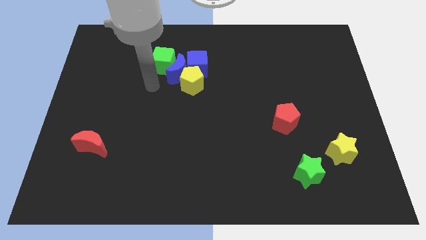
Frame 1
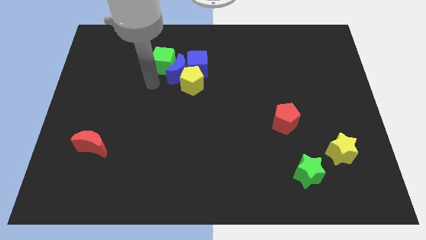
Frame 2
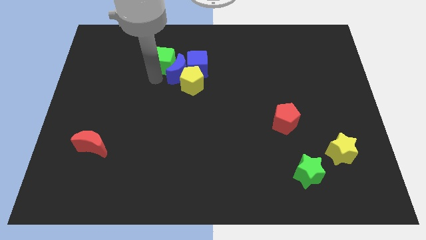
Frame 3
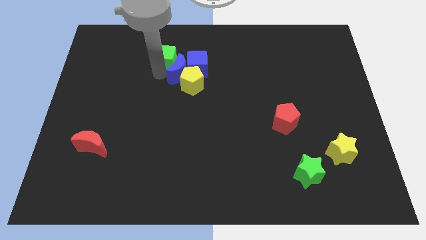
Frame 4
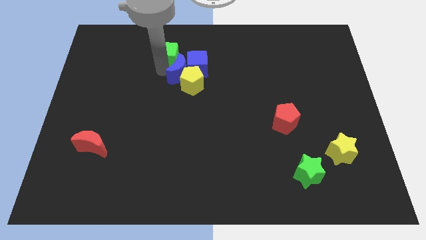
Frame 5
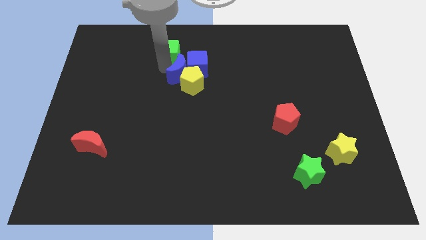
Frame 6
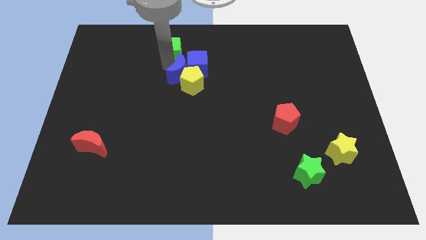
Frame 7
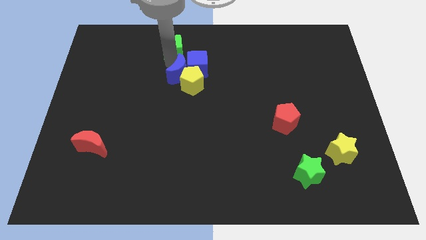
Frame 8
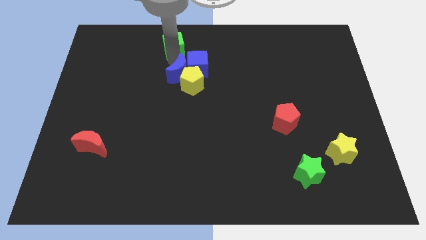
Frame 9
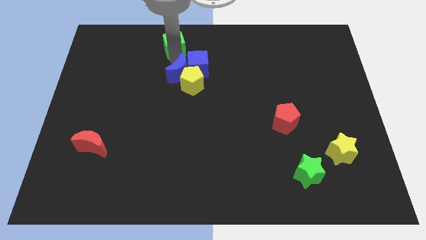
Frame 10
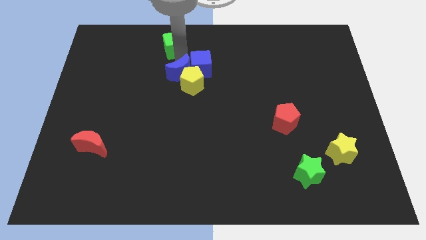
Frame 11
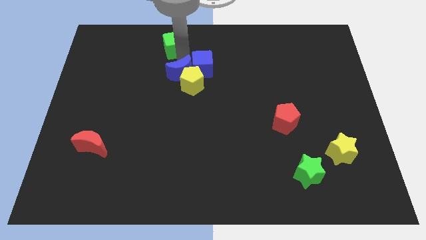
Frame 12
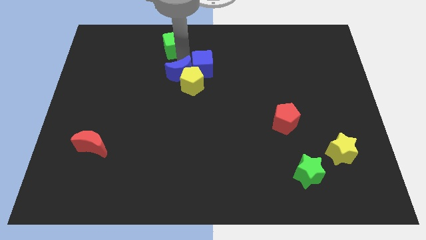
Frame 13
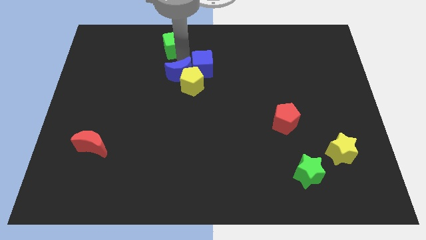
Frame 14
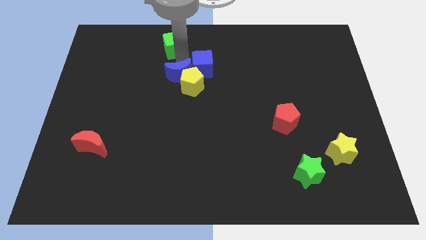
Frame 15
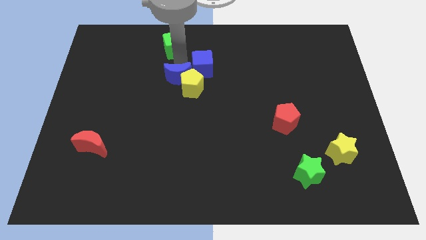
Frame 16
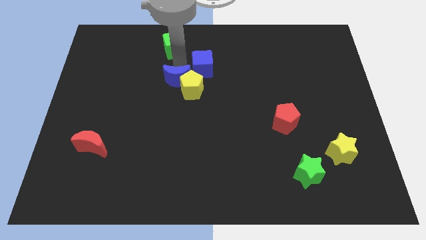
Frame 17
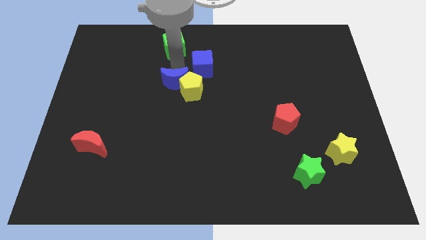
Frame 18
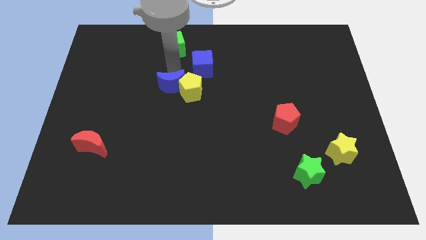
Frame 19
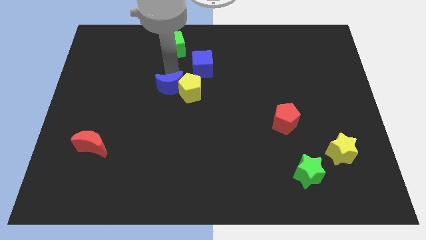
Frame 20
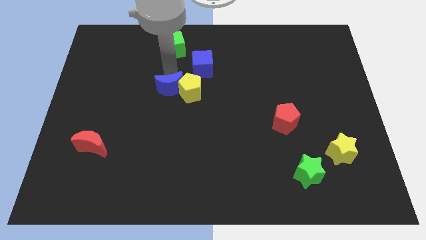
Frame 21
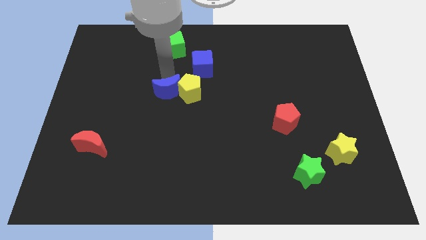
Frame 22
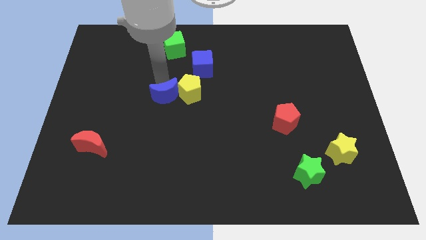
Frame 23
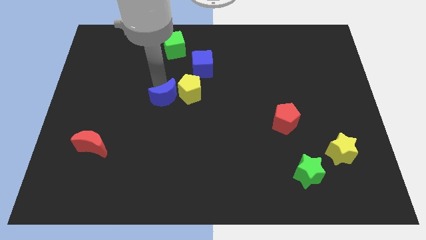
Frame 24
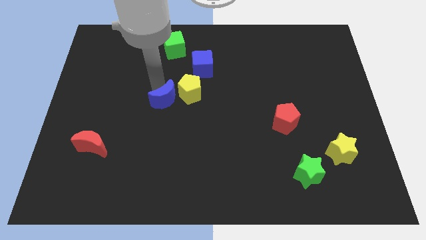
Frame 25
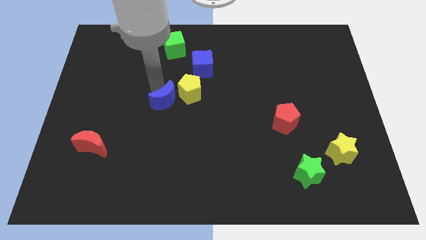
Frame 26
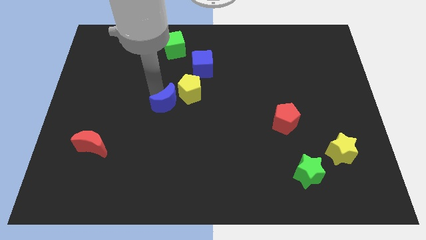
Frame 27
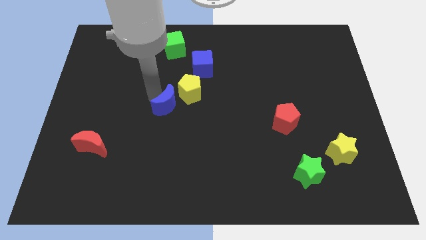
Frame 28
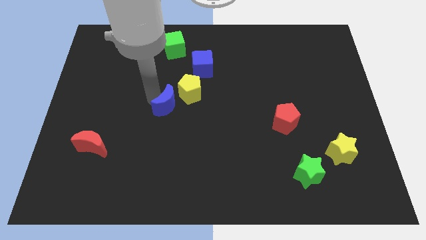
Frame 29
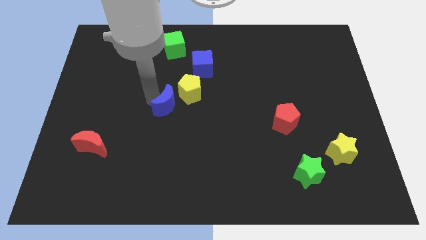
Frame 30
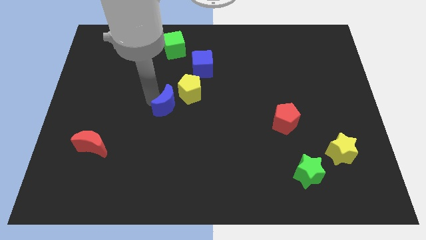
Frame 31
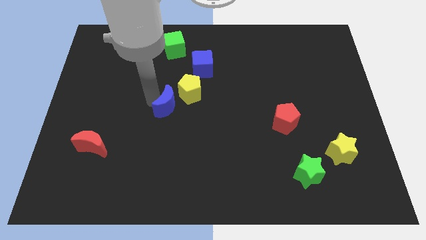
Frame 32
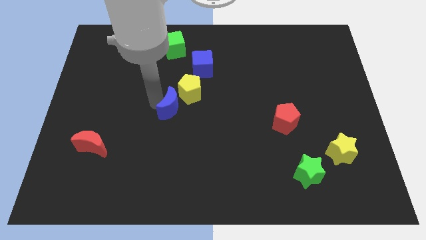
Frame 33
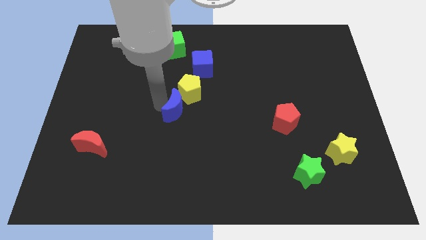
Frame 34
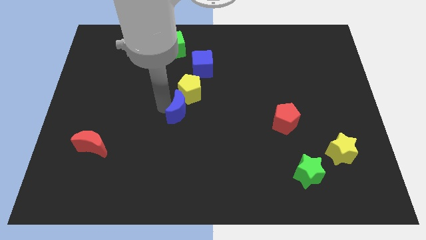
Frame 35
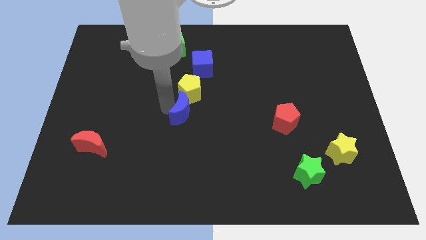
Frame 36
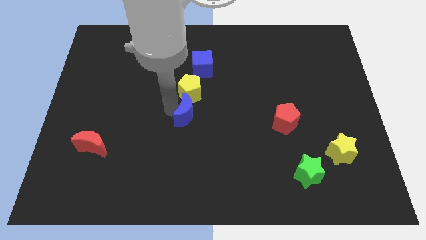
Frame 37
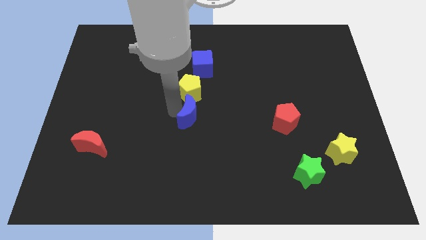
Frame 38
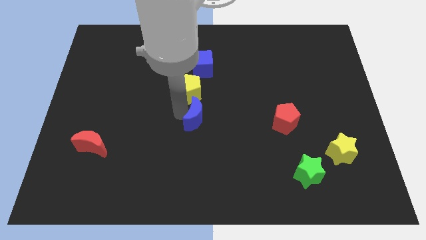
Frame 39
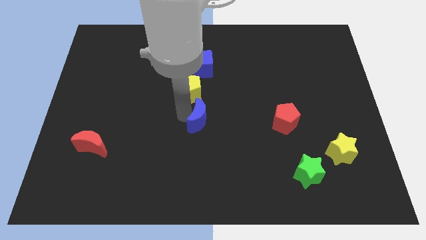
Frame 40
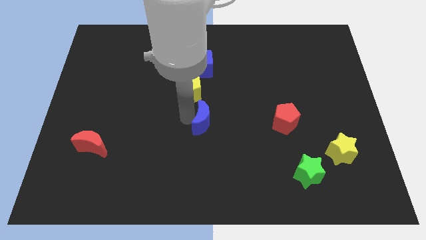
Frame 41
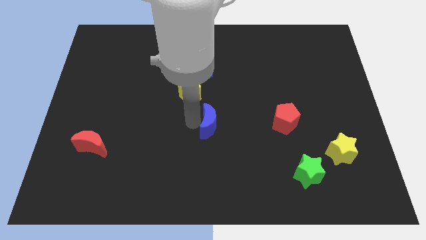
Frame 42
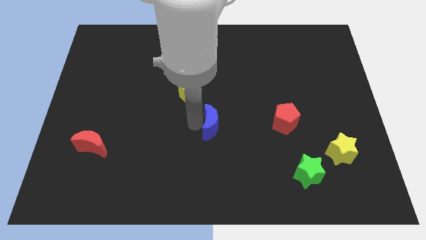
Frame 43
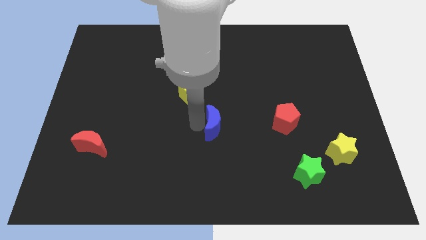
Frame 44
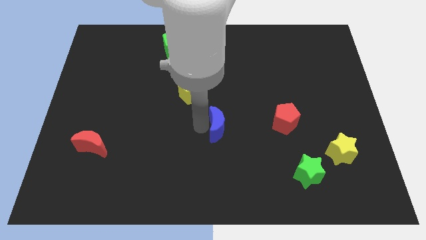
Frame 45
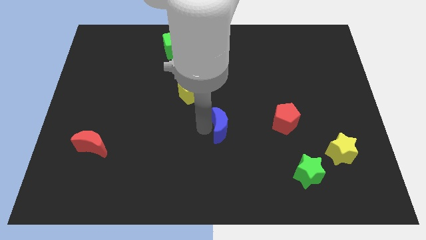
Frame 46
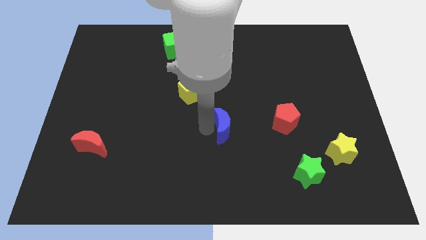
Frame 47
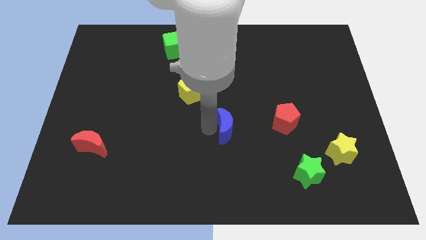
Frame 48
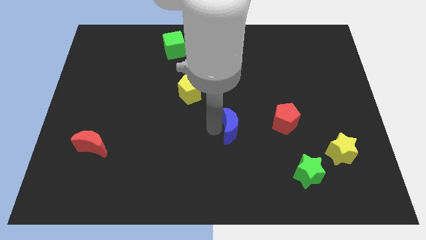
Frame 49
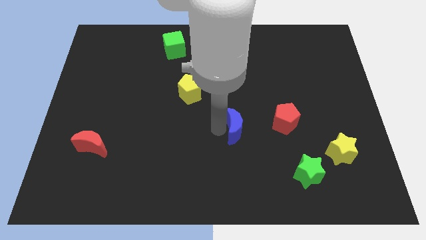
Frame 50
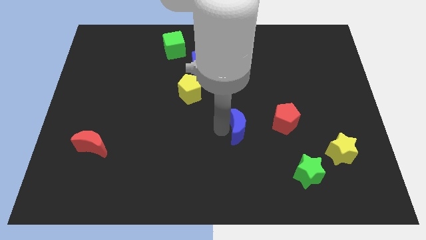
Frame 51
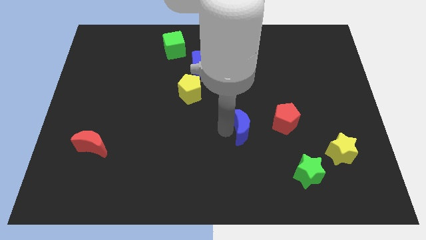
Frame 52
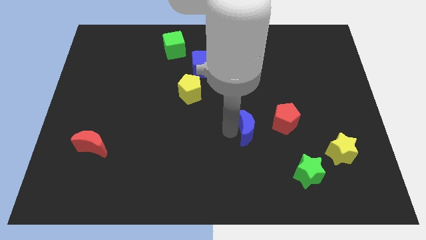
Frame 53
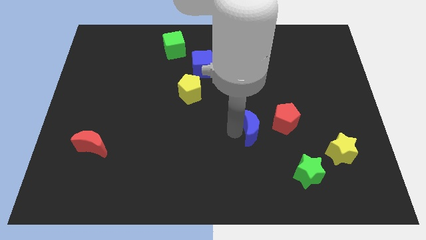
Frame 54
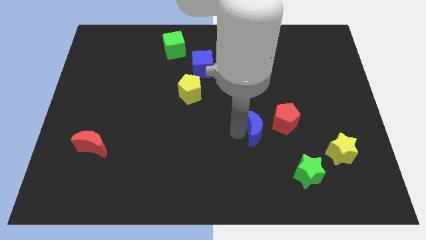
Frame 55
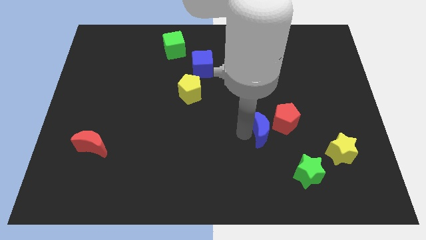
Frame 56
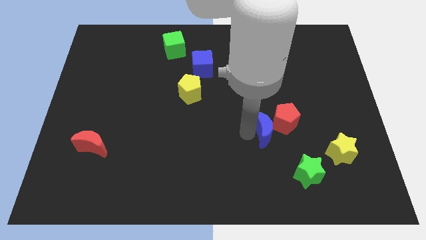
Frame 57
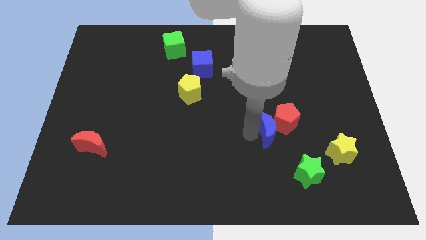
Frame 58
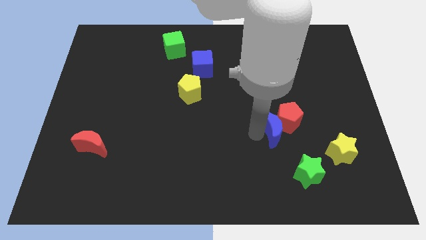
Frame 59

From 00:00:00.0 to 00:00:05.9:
put the blue moon next to the red pentagon

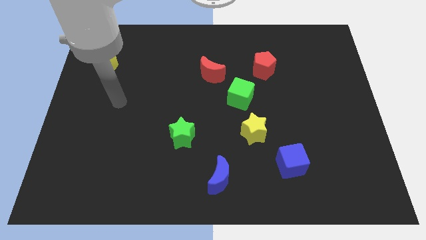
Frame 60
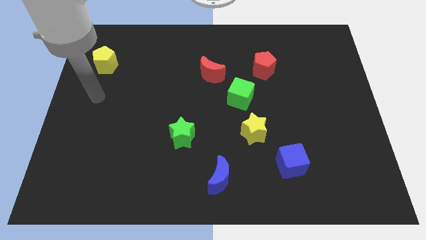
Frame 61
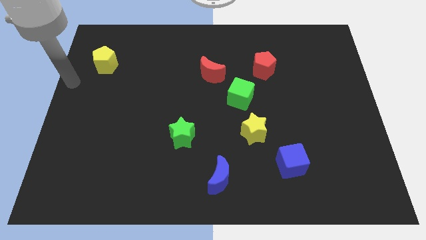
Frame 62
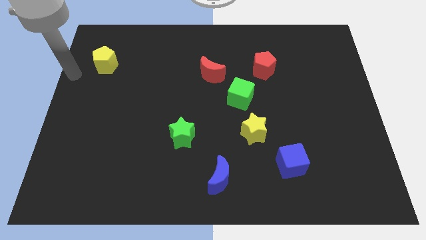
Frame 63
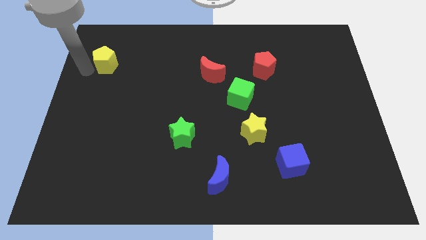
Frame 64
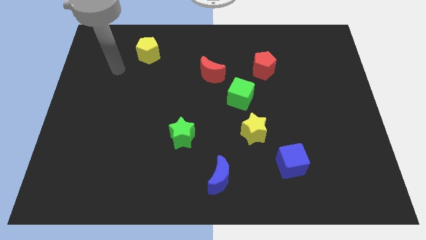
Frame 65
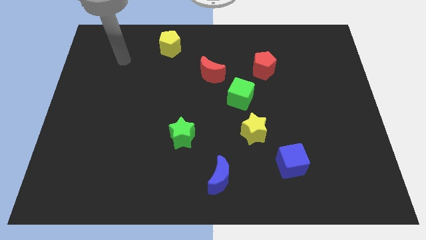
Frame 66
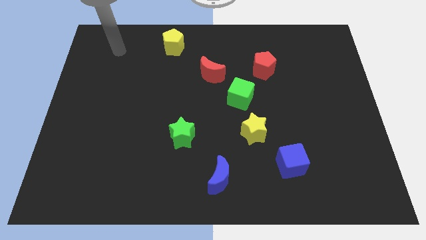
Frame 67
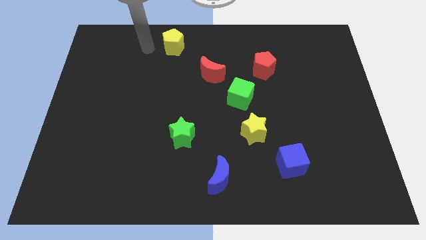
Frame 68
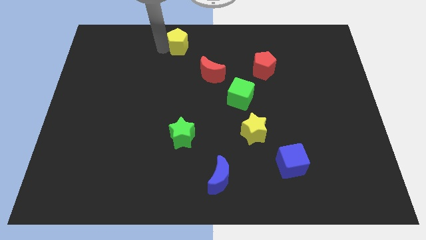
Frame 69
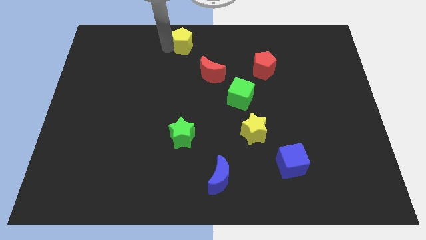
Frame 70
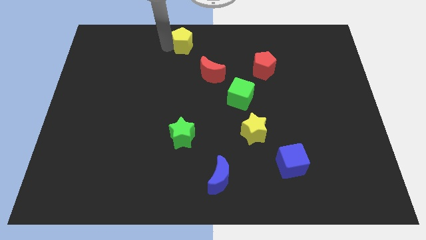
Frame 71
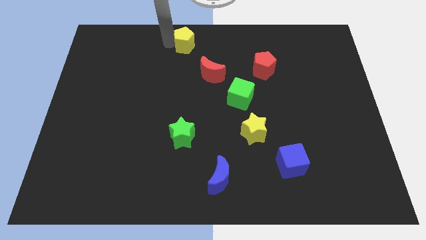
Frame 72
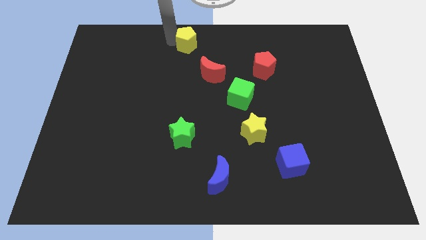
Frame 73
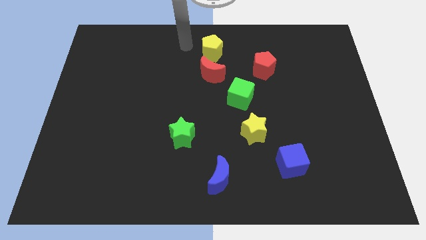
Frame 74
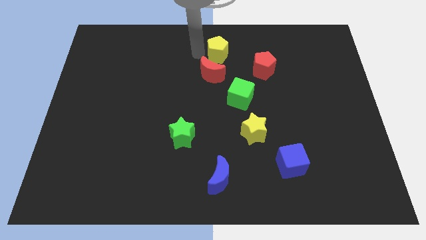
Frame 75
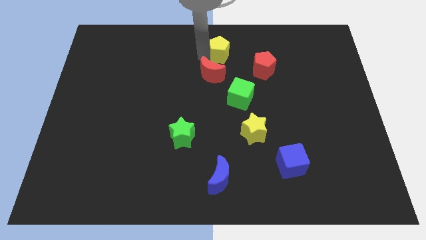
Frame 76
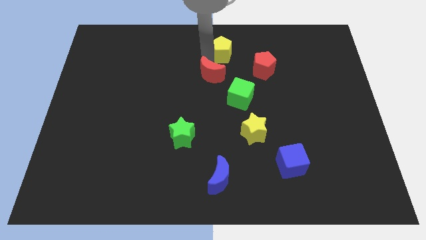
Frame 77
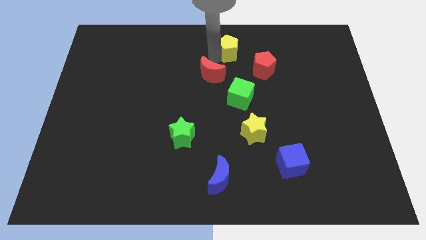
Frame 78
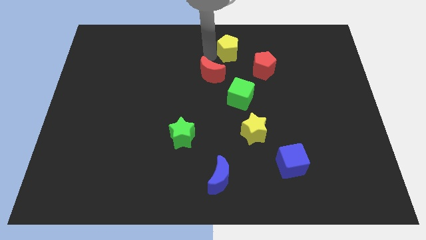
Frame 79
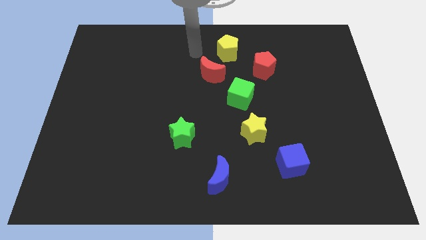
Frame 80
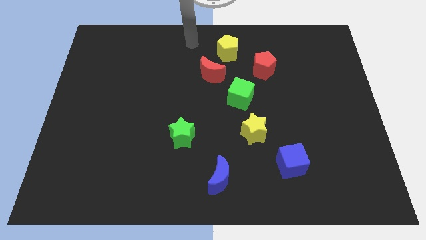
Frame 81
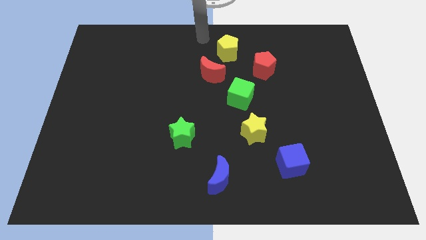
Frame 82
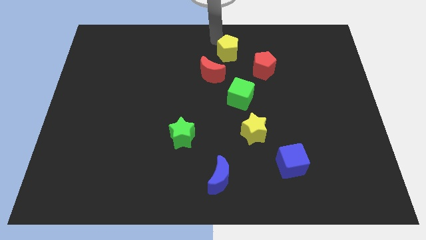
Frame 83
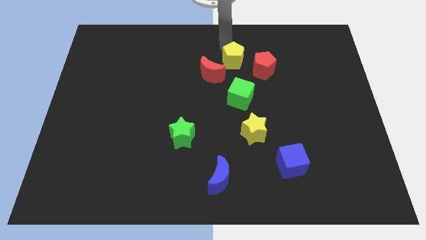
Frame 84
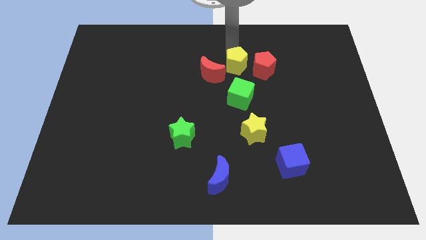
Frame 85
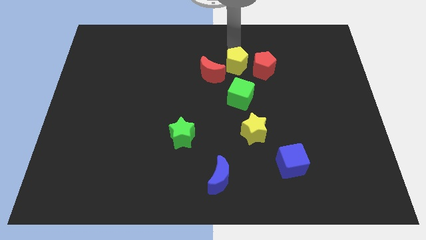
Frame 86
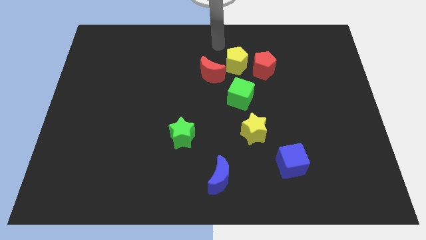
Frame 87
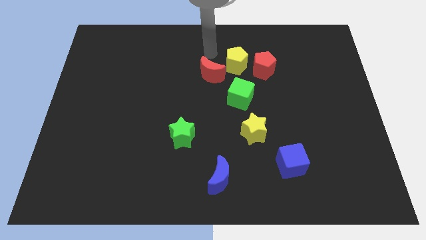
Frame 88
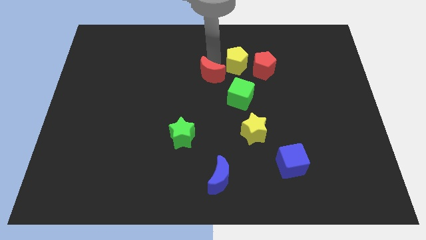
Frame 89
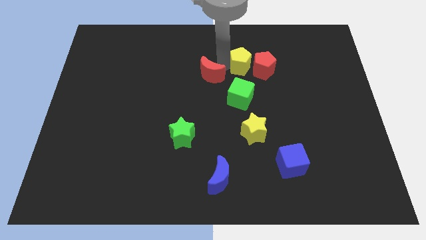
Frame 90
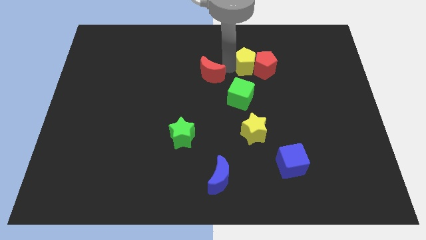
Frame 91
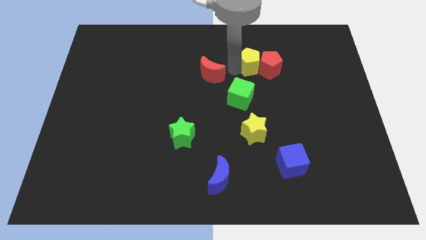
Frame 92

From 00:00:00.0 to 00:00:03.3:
slide the yellow pentagon towards the red pentagon
